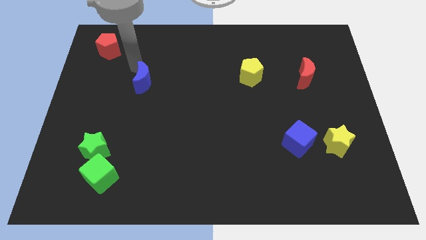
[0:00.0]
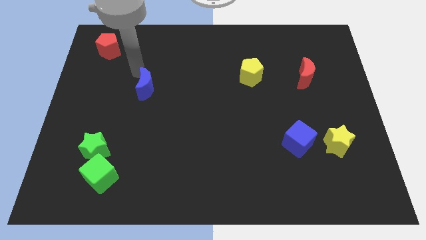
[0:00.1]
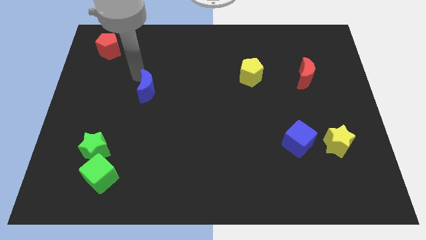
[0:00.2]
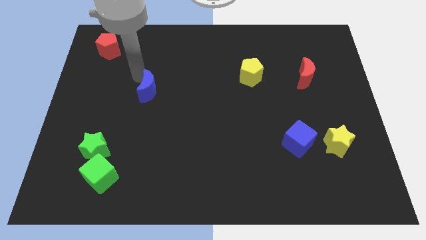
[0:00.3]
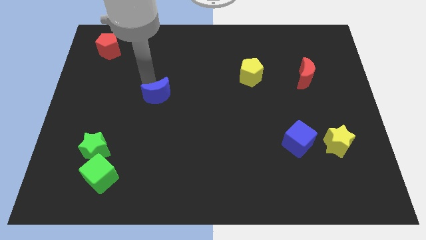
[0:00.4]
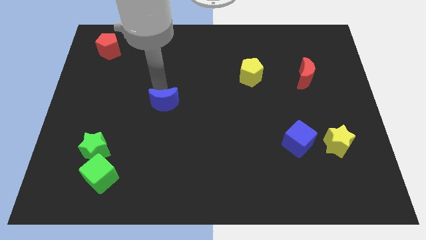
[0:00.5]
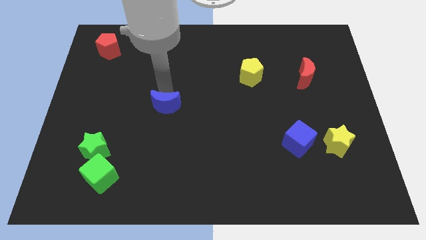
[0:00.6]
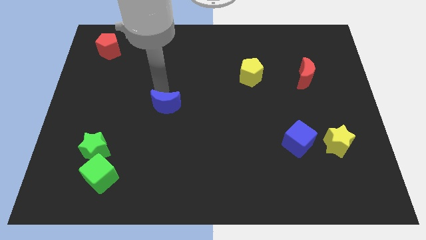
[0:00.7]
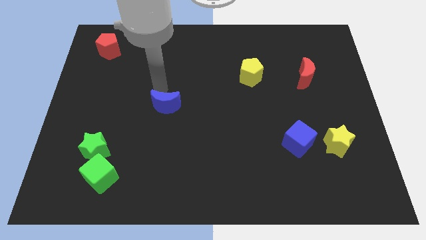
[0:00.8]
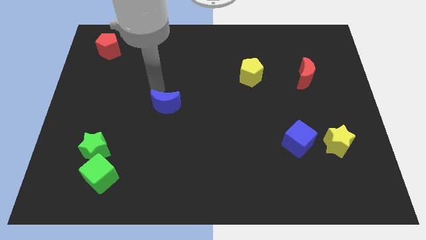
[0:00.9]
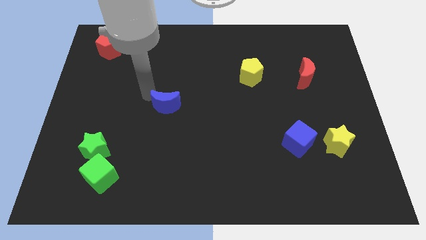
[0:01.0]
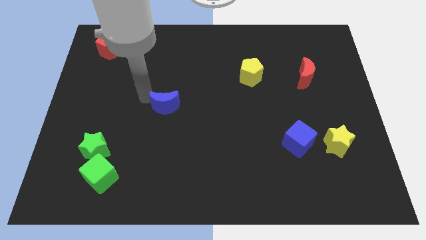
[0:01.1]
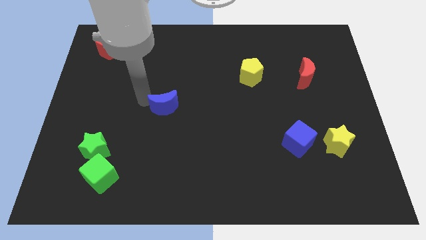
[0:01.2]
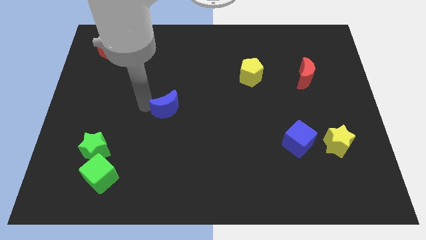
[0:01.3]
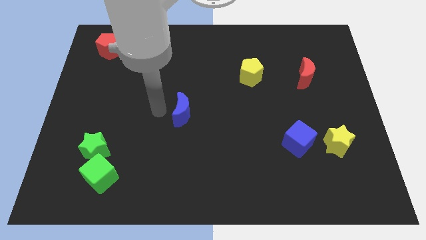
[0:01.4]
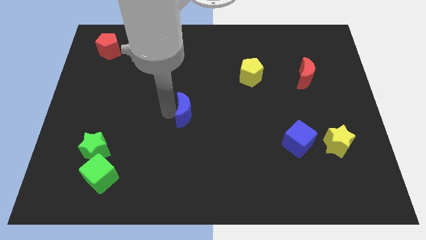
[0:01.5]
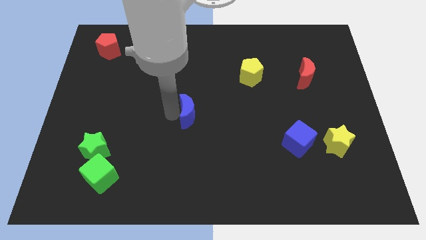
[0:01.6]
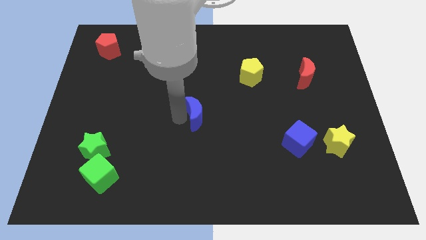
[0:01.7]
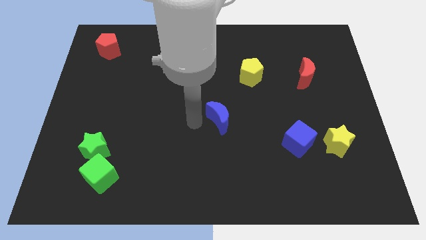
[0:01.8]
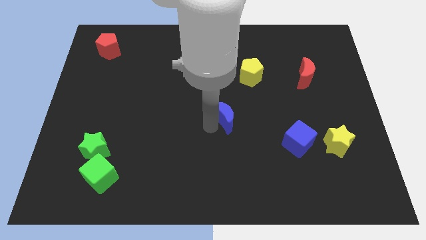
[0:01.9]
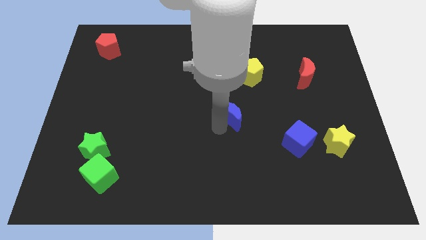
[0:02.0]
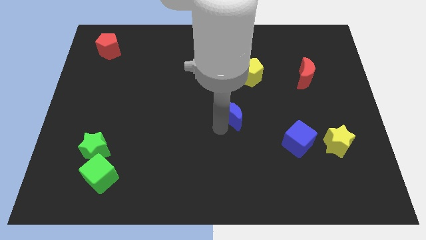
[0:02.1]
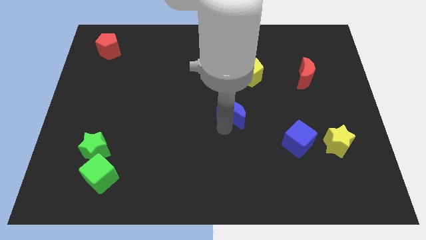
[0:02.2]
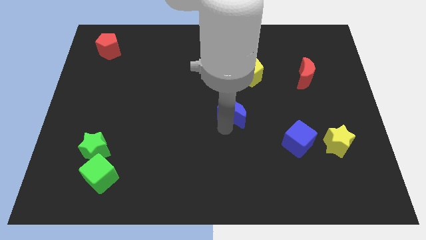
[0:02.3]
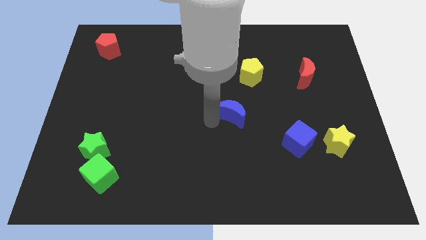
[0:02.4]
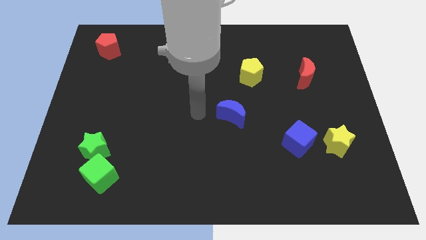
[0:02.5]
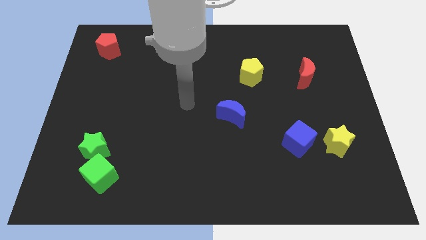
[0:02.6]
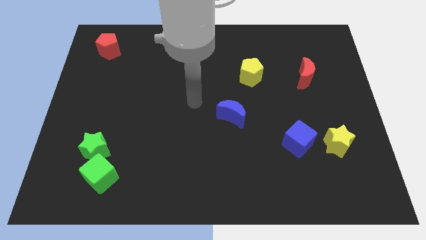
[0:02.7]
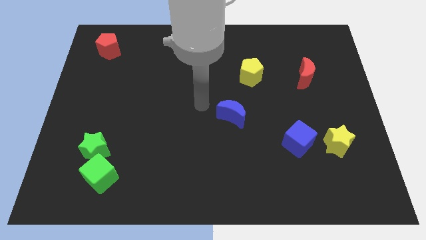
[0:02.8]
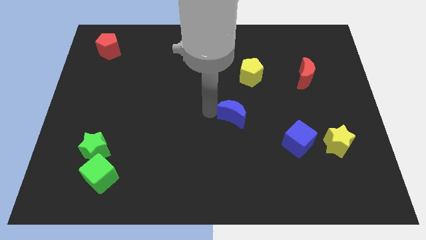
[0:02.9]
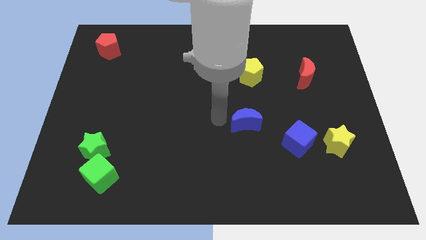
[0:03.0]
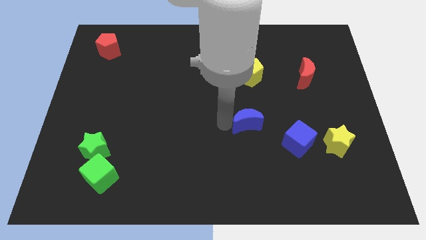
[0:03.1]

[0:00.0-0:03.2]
place the blue moon vertically bottom of the yellow pentagon

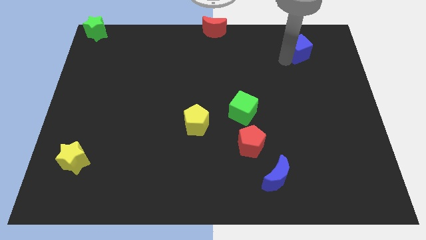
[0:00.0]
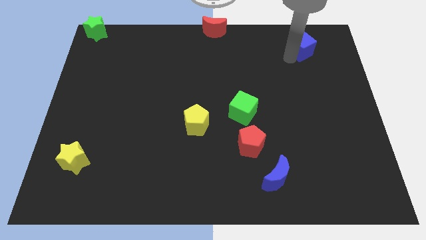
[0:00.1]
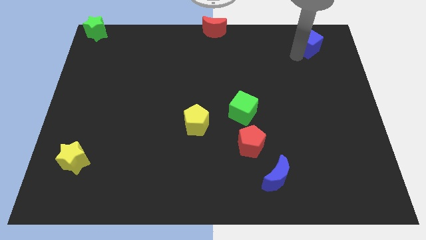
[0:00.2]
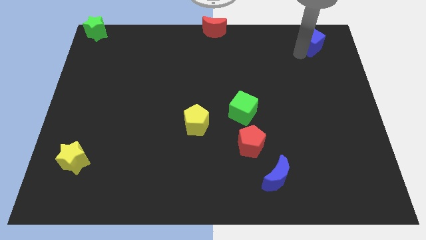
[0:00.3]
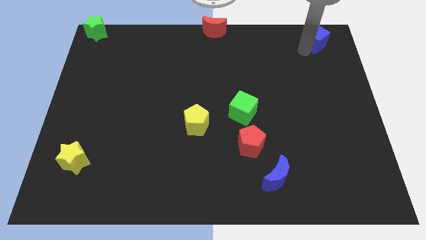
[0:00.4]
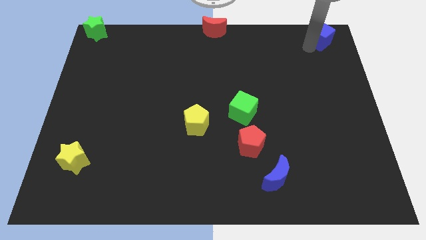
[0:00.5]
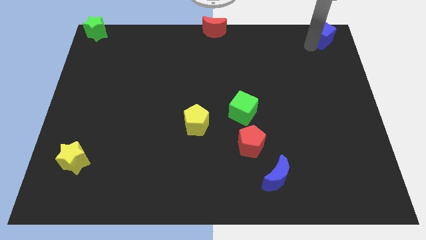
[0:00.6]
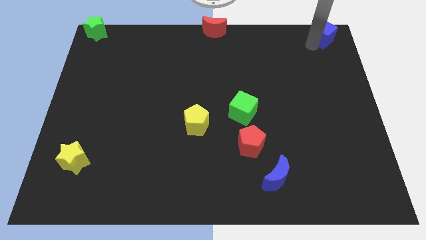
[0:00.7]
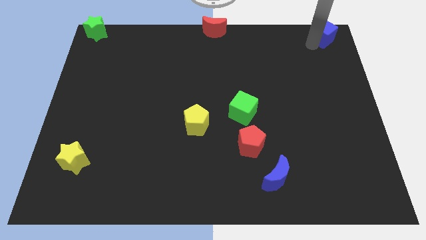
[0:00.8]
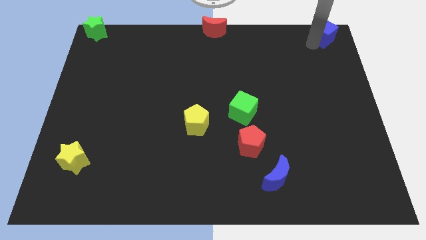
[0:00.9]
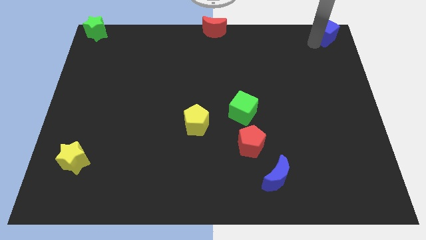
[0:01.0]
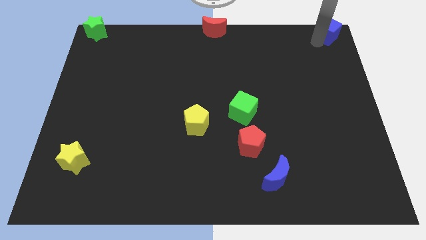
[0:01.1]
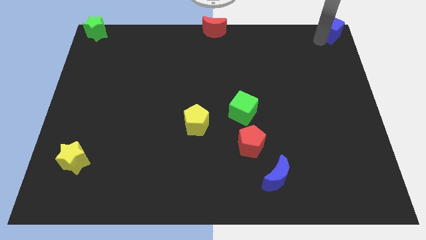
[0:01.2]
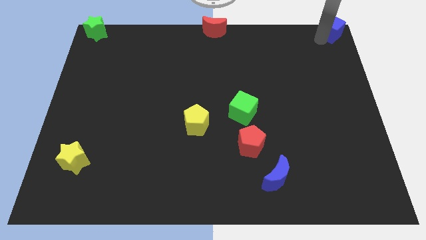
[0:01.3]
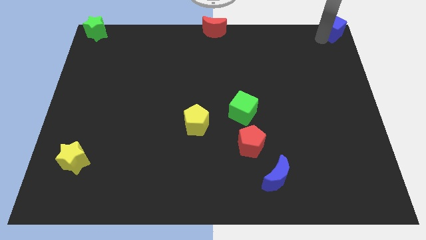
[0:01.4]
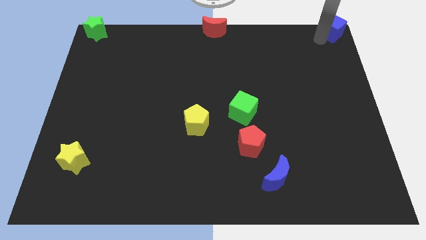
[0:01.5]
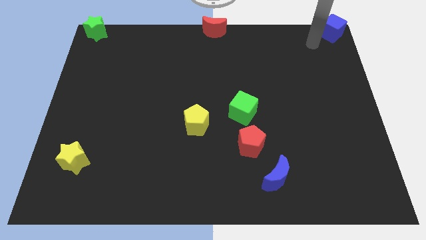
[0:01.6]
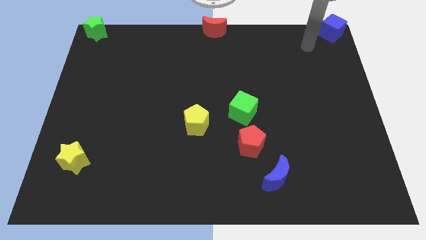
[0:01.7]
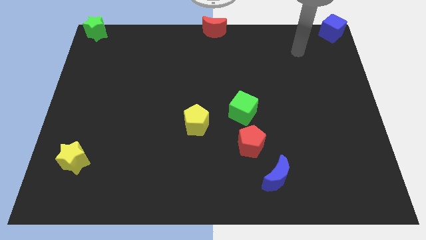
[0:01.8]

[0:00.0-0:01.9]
drag the blue cube at the top right corner

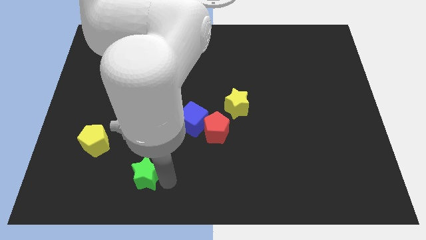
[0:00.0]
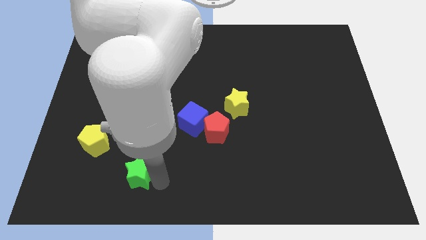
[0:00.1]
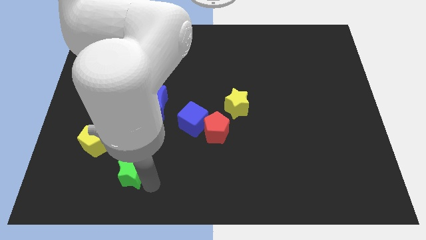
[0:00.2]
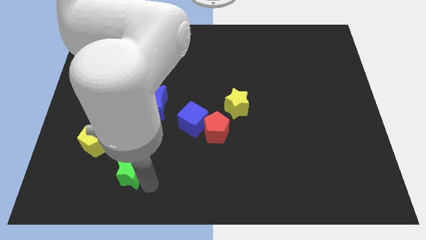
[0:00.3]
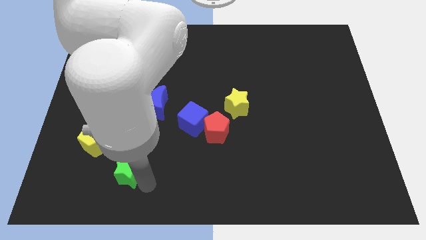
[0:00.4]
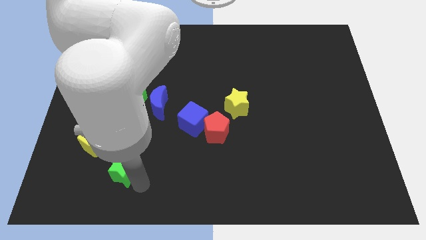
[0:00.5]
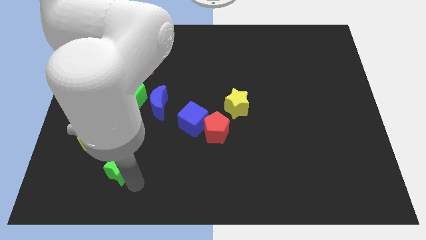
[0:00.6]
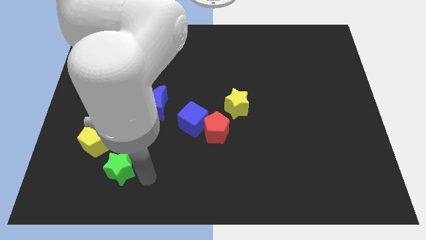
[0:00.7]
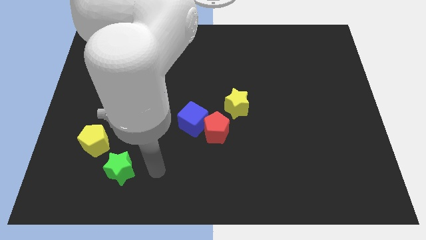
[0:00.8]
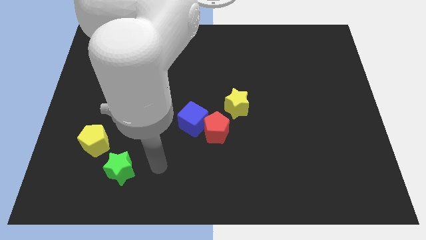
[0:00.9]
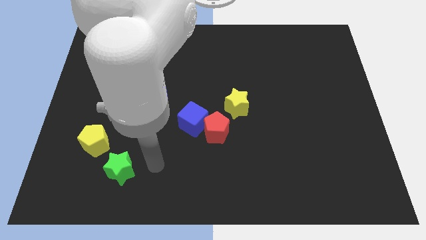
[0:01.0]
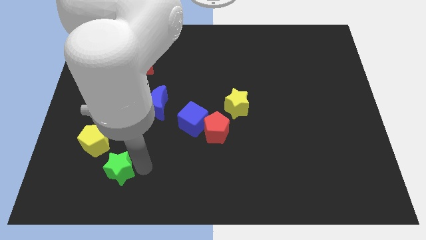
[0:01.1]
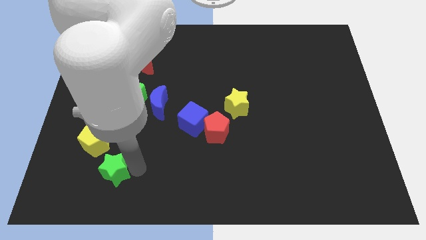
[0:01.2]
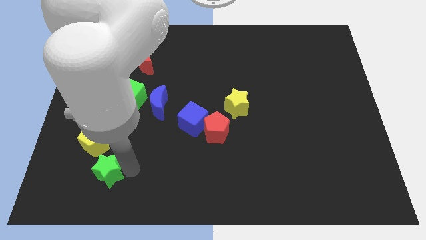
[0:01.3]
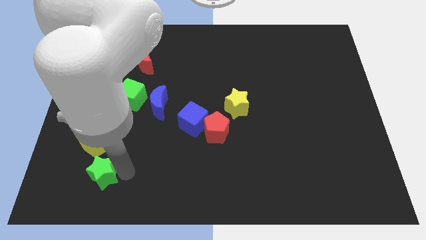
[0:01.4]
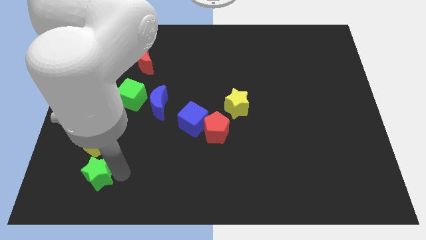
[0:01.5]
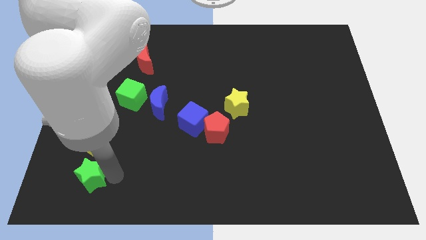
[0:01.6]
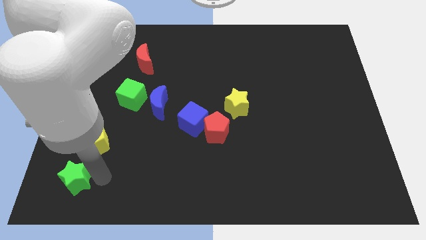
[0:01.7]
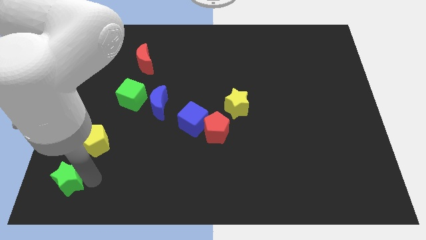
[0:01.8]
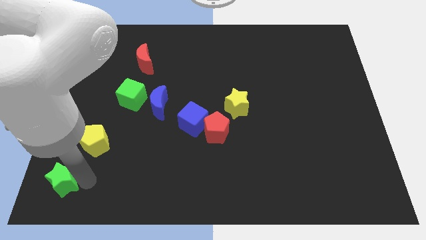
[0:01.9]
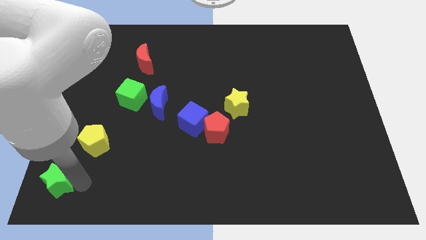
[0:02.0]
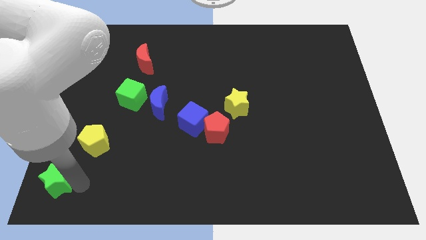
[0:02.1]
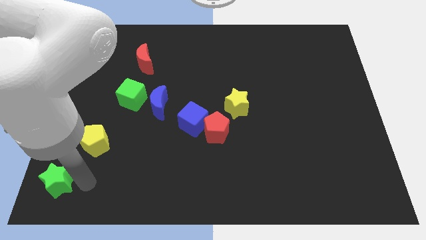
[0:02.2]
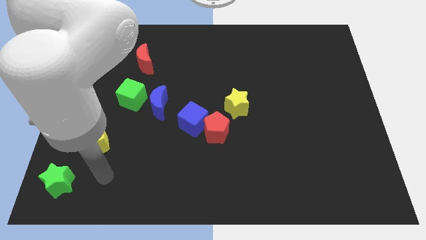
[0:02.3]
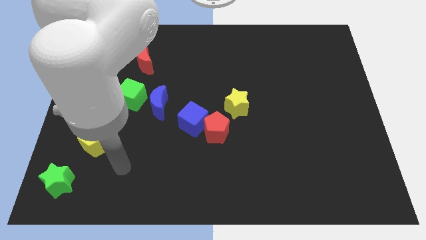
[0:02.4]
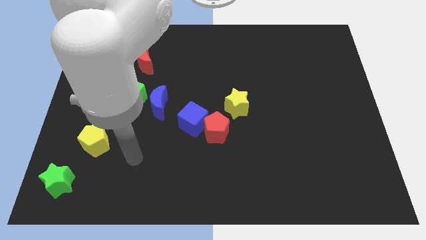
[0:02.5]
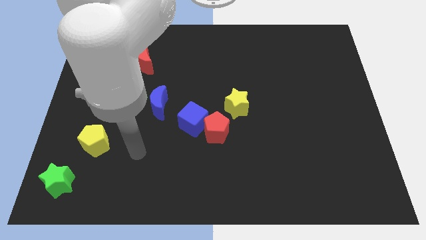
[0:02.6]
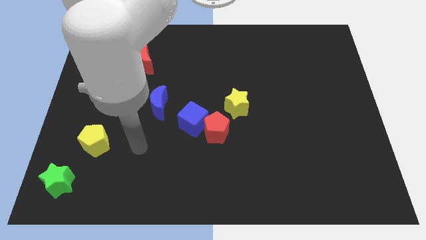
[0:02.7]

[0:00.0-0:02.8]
move the green star to the bottom left of the yellow pentagon

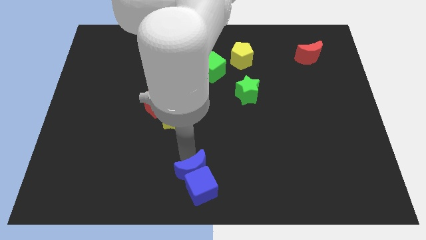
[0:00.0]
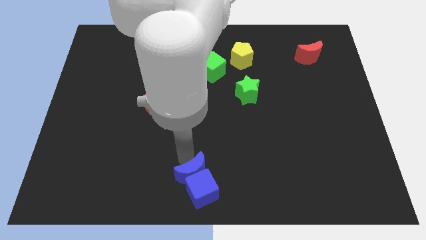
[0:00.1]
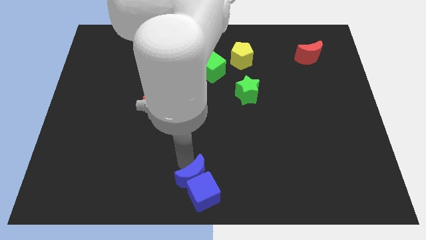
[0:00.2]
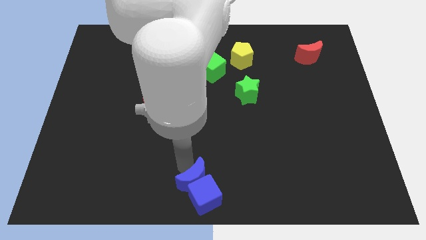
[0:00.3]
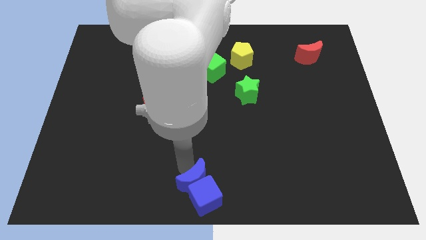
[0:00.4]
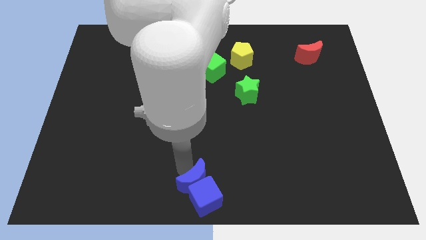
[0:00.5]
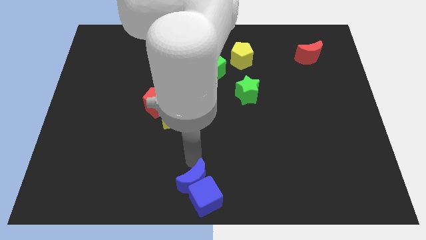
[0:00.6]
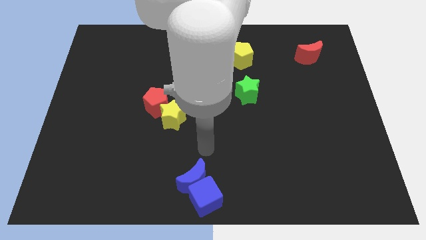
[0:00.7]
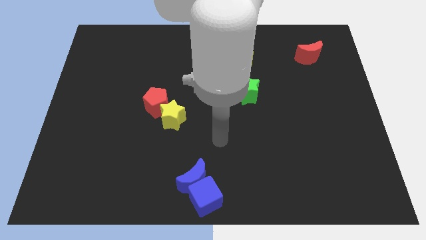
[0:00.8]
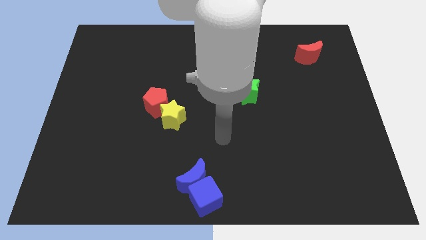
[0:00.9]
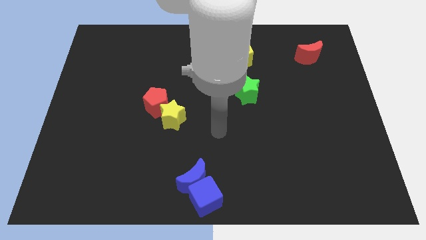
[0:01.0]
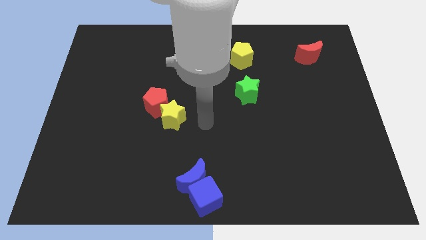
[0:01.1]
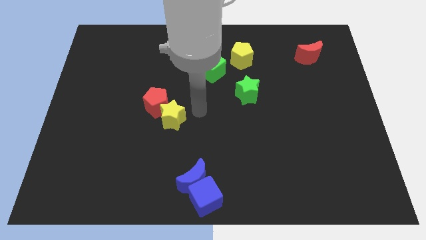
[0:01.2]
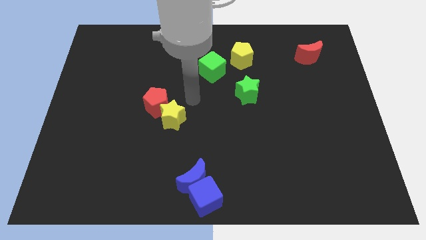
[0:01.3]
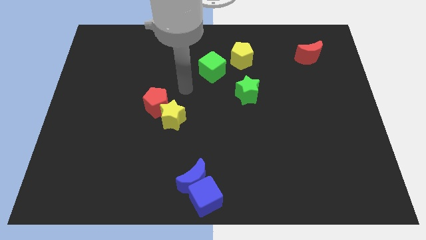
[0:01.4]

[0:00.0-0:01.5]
push the blue cube with blue crescent
